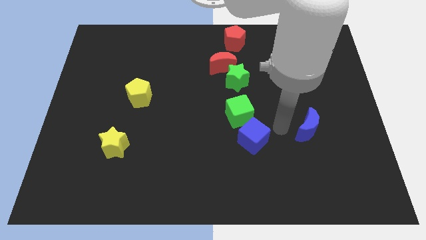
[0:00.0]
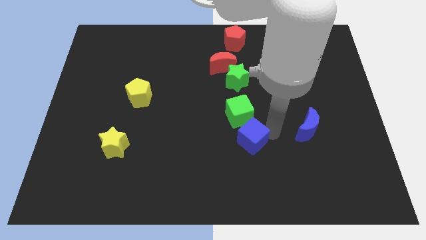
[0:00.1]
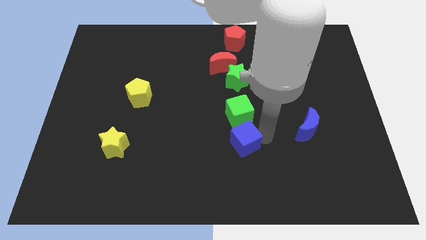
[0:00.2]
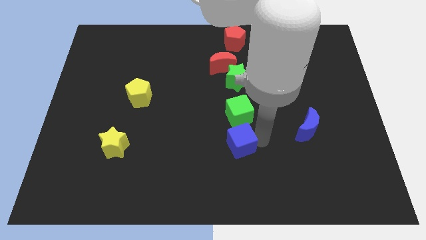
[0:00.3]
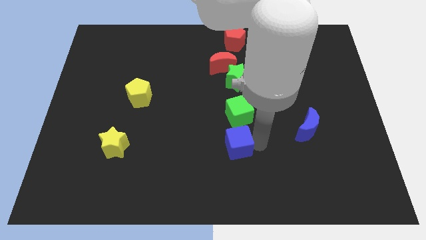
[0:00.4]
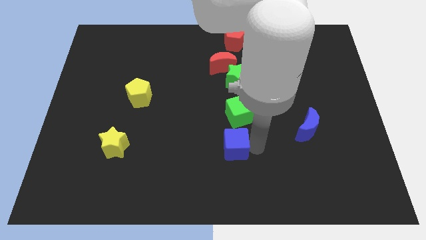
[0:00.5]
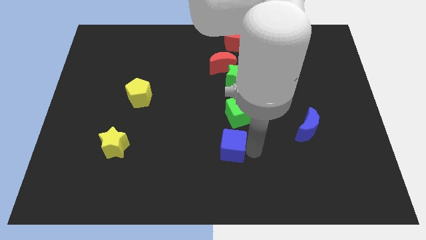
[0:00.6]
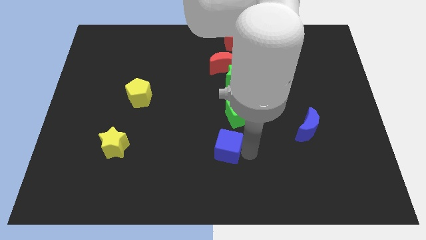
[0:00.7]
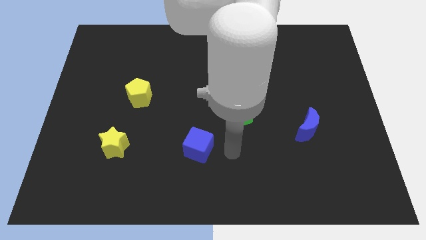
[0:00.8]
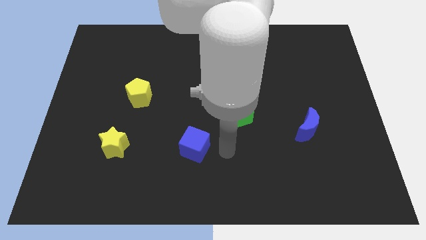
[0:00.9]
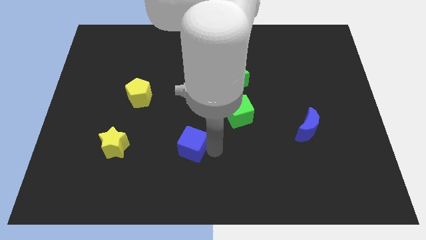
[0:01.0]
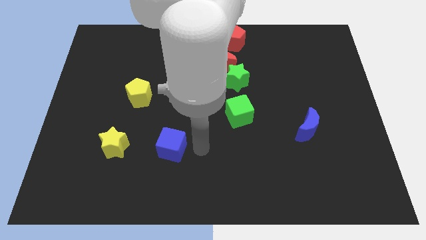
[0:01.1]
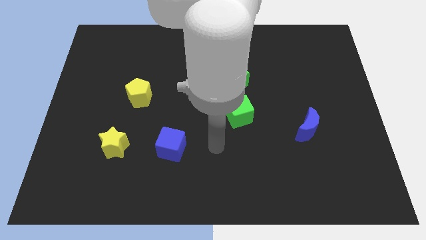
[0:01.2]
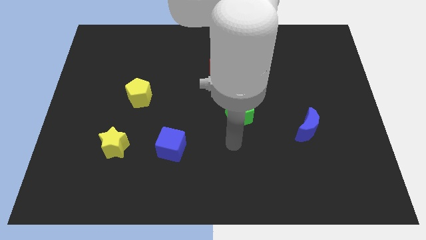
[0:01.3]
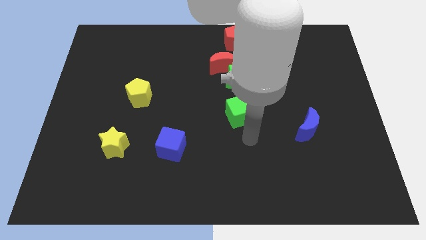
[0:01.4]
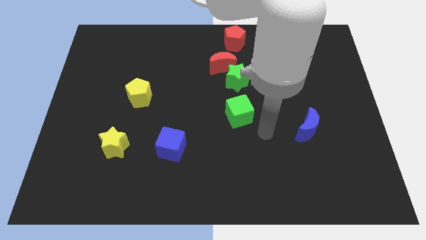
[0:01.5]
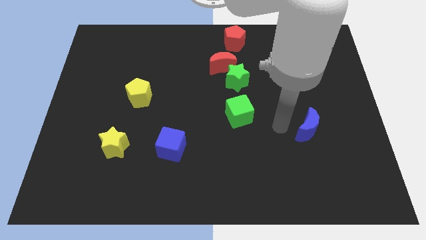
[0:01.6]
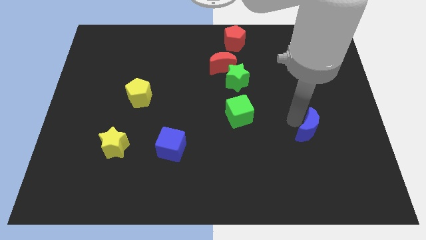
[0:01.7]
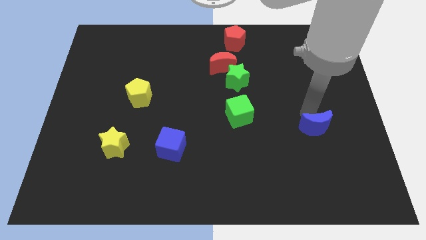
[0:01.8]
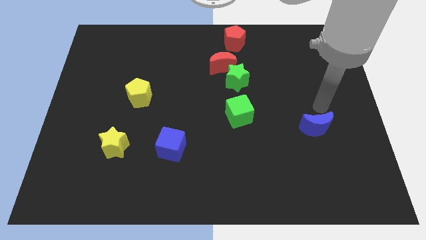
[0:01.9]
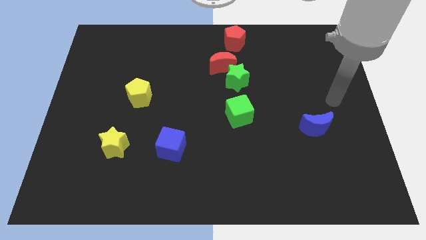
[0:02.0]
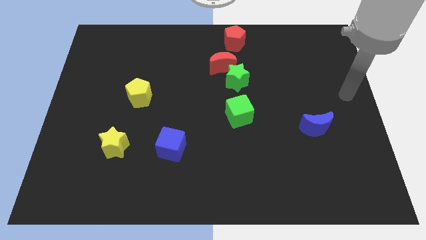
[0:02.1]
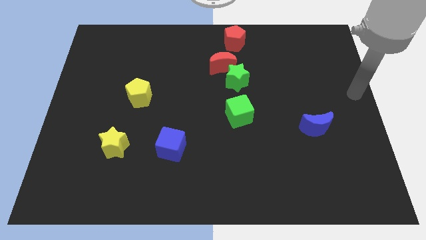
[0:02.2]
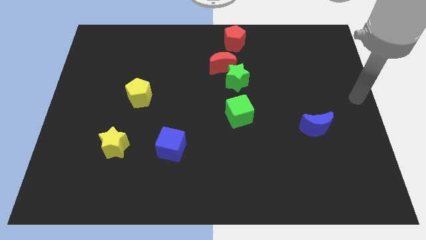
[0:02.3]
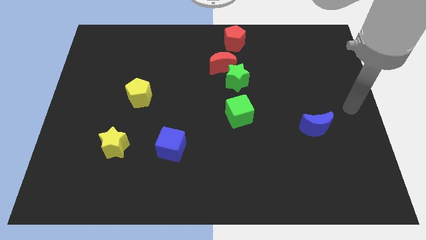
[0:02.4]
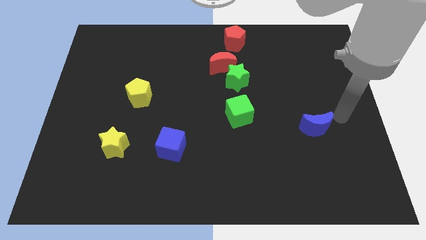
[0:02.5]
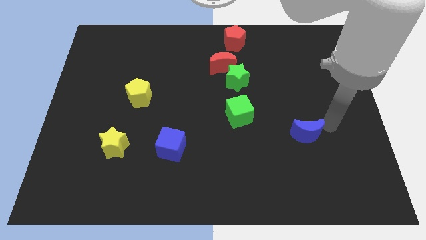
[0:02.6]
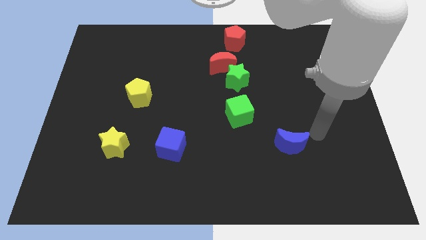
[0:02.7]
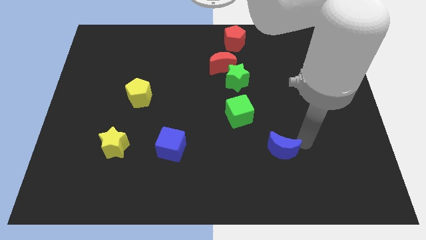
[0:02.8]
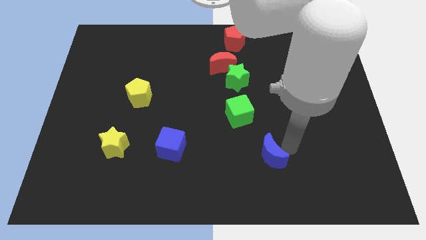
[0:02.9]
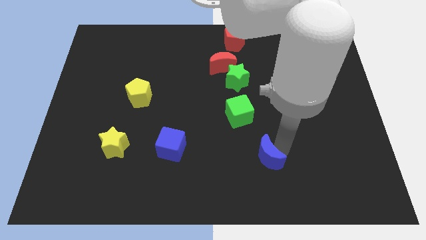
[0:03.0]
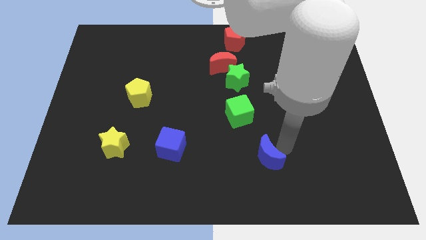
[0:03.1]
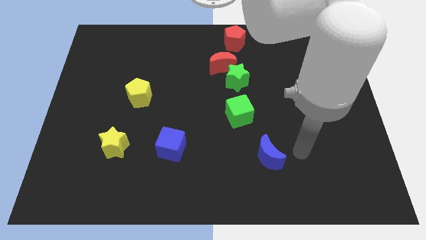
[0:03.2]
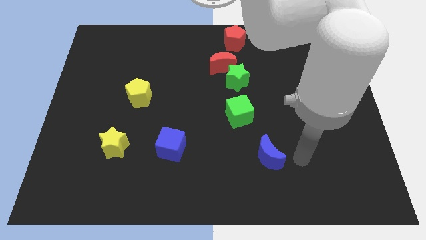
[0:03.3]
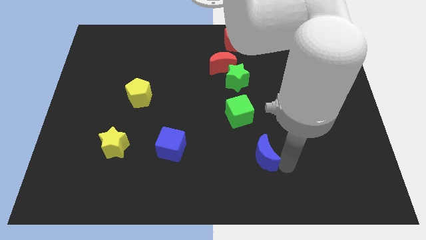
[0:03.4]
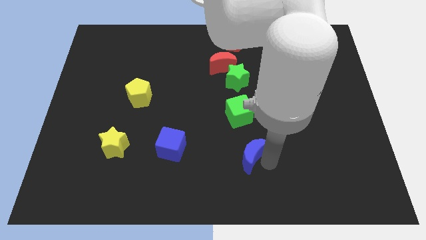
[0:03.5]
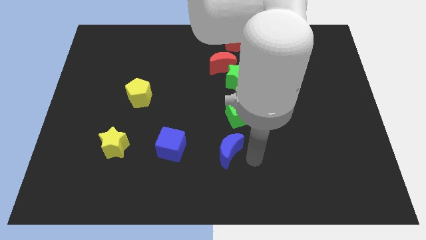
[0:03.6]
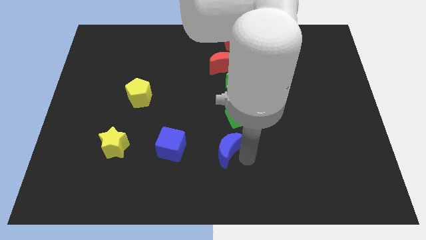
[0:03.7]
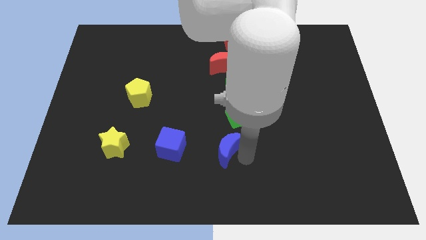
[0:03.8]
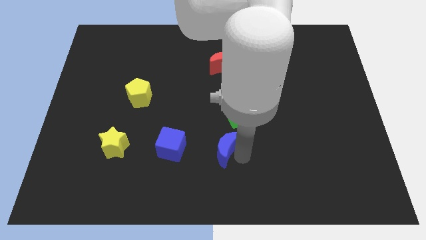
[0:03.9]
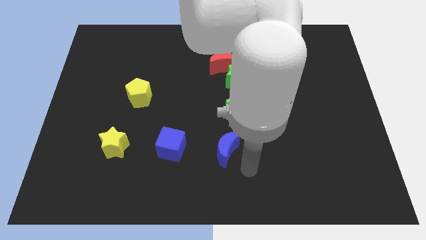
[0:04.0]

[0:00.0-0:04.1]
push the blue cube and blue crescent horizontally to the right side of the yellow star

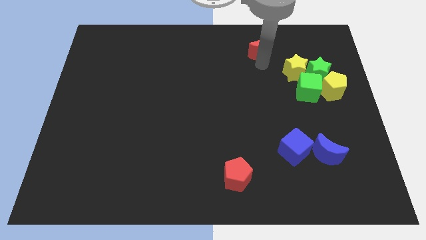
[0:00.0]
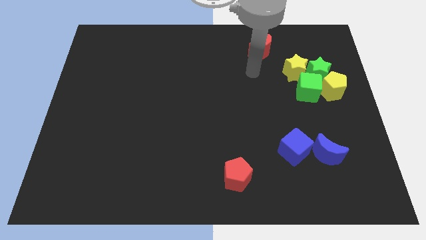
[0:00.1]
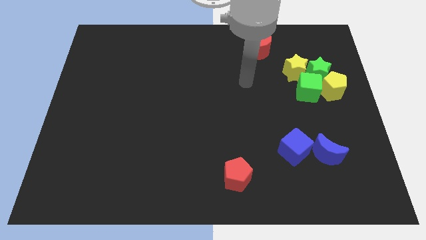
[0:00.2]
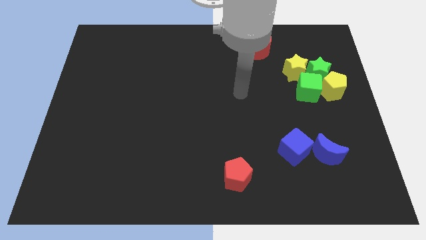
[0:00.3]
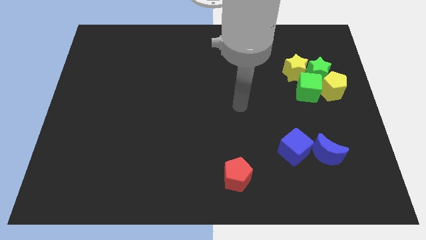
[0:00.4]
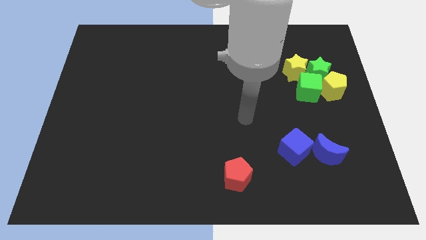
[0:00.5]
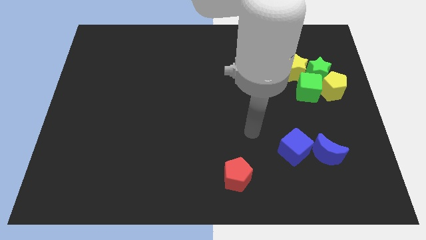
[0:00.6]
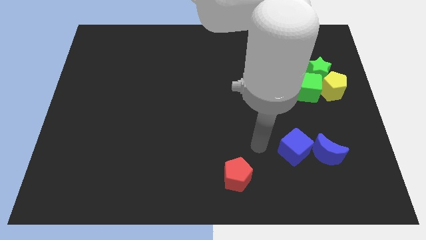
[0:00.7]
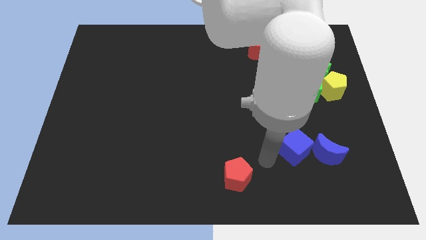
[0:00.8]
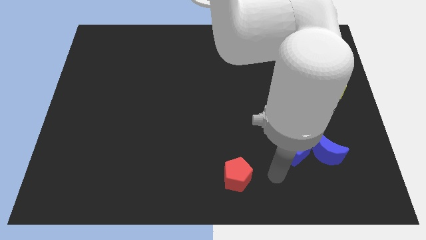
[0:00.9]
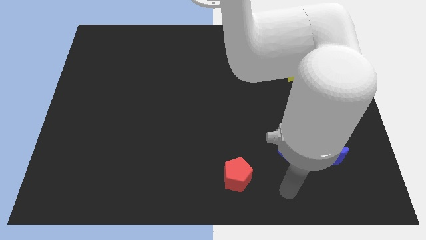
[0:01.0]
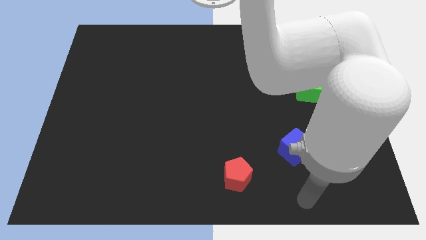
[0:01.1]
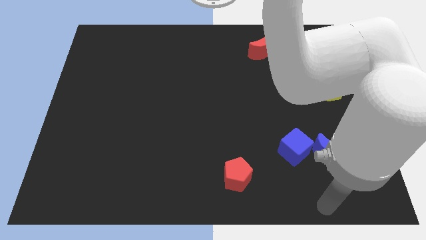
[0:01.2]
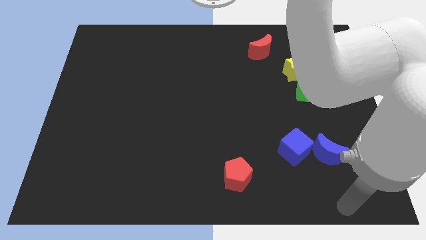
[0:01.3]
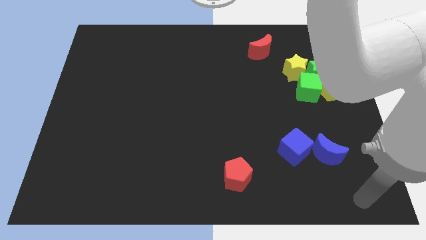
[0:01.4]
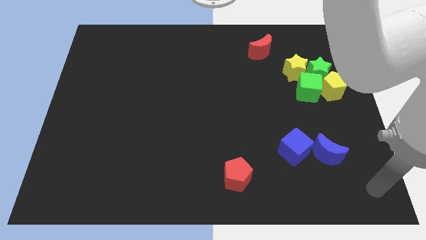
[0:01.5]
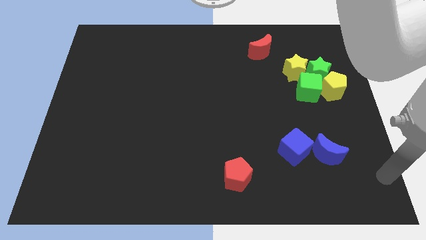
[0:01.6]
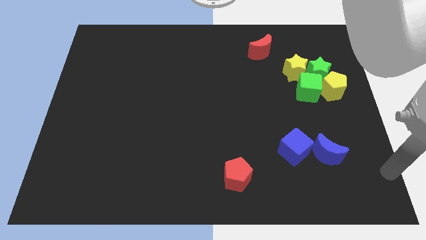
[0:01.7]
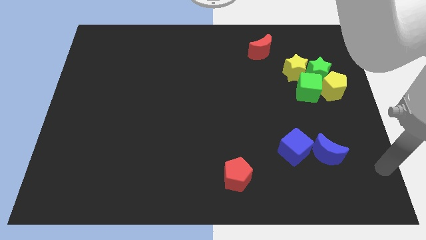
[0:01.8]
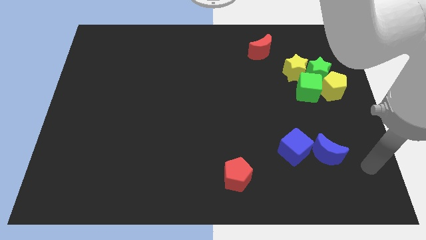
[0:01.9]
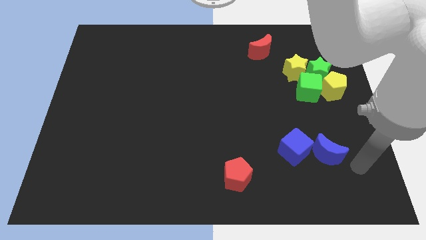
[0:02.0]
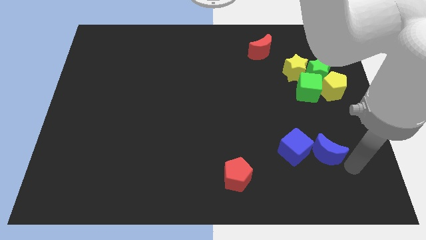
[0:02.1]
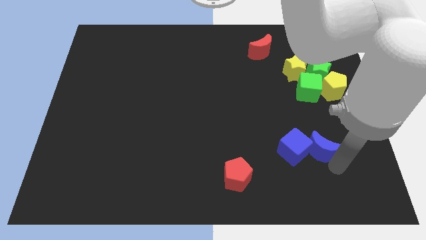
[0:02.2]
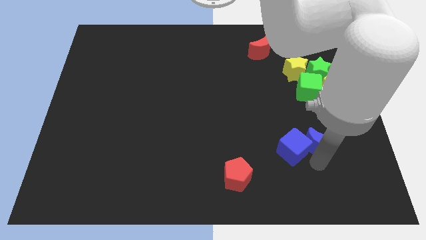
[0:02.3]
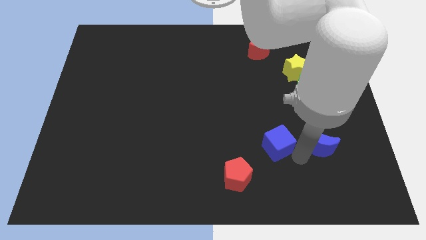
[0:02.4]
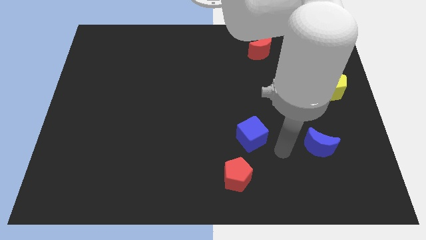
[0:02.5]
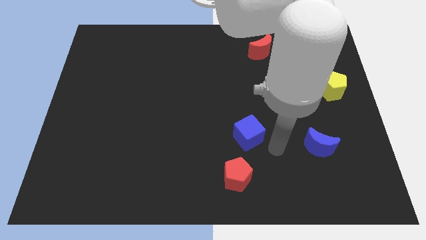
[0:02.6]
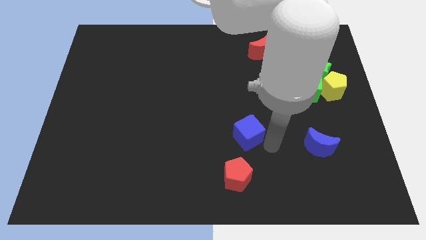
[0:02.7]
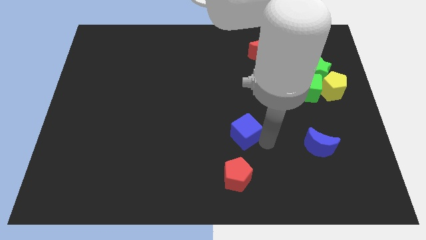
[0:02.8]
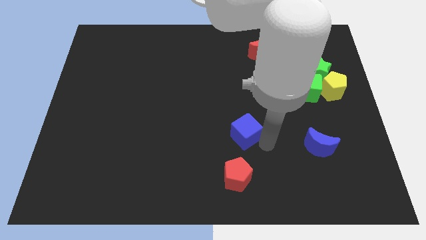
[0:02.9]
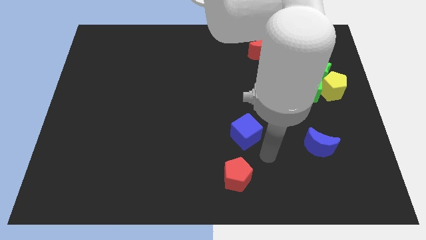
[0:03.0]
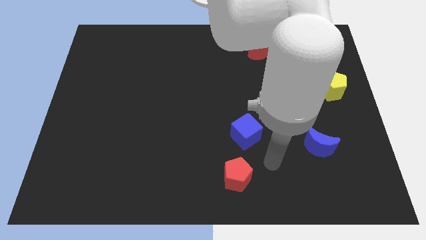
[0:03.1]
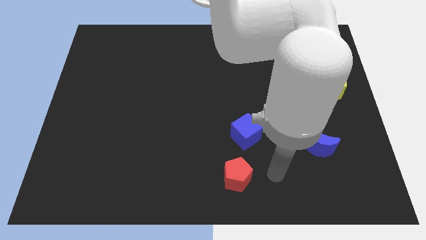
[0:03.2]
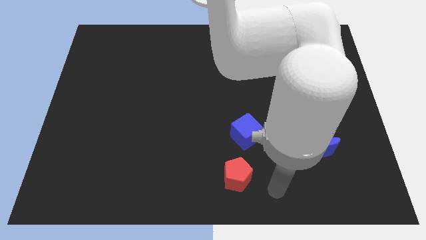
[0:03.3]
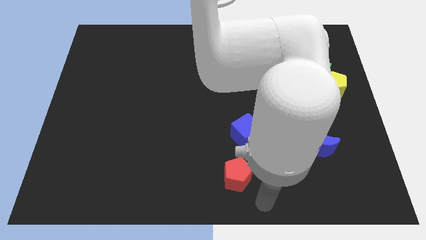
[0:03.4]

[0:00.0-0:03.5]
move your arm away from the red crescent

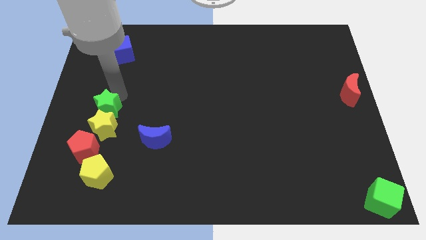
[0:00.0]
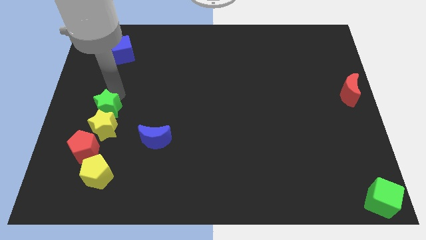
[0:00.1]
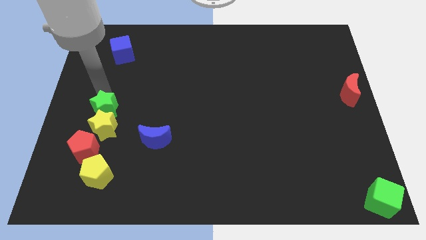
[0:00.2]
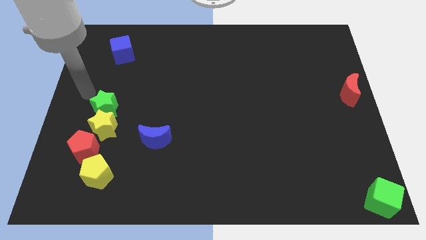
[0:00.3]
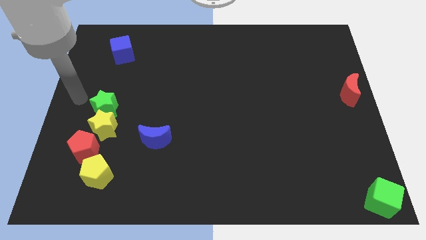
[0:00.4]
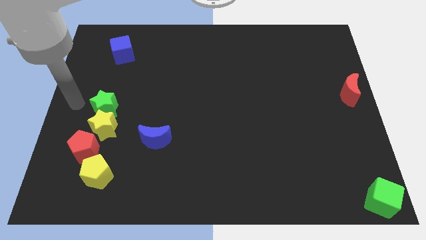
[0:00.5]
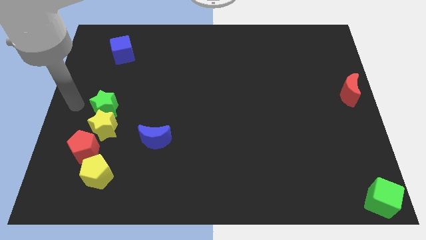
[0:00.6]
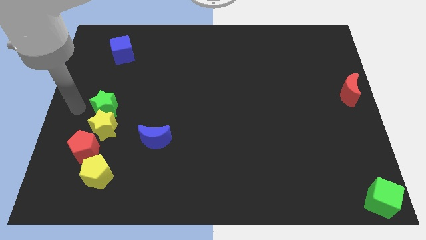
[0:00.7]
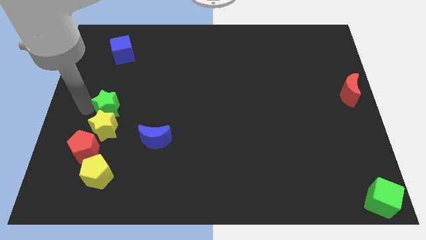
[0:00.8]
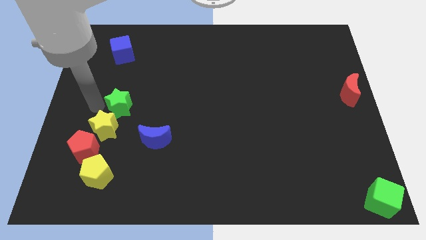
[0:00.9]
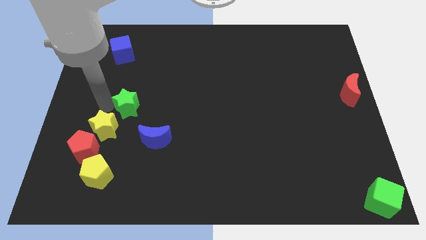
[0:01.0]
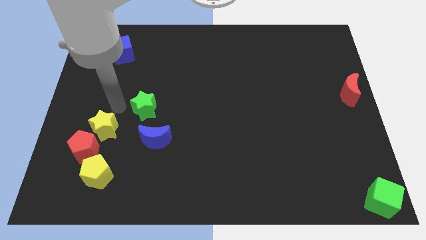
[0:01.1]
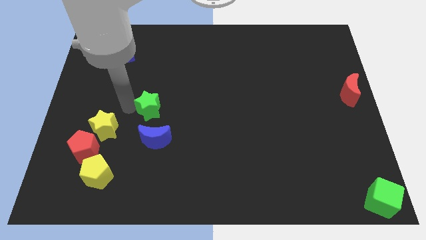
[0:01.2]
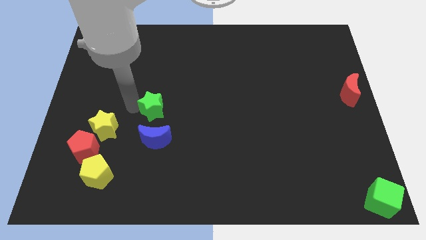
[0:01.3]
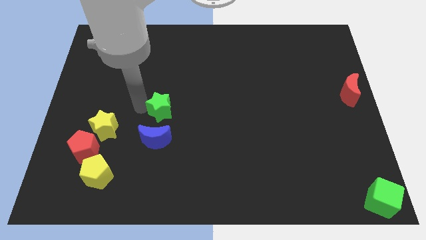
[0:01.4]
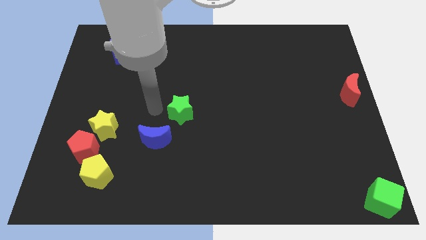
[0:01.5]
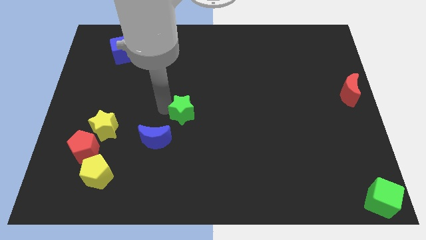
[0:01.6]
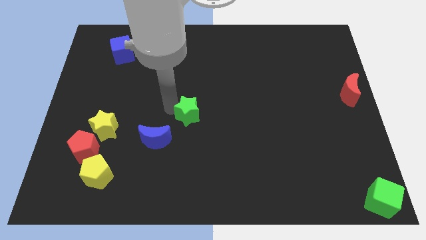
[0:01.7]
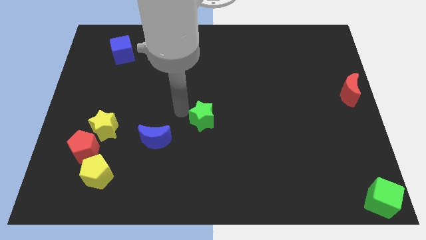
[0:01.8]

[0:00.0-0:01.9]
separate the green star from the yellow star
